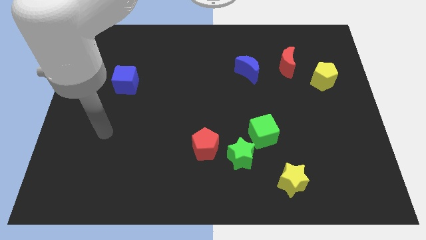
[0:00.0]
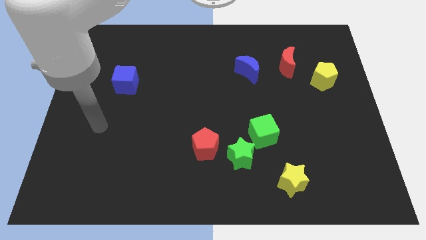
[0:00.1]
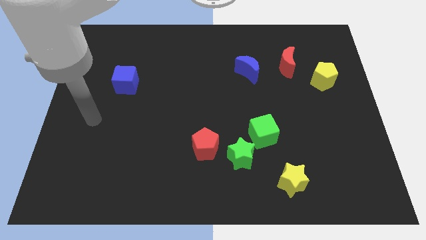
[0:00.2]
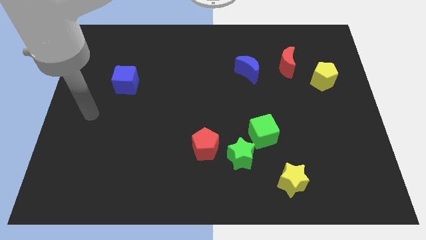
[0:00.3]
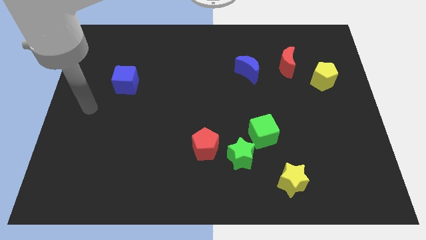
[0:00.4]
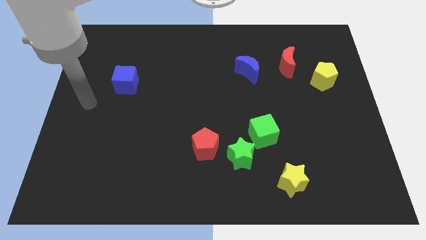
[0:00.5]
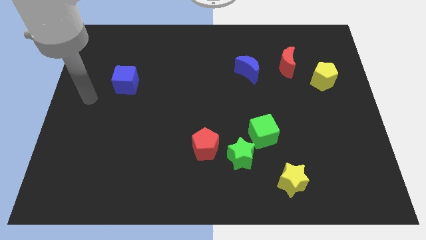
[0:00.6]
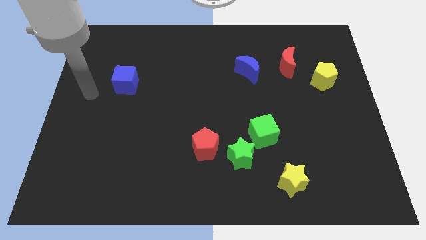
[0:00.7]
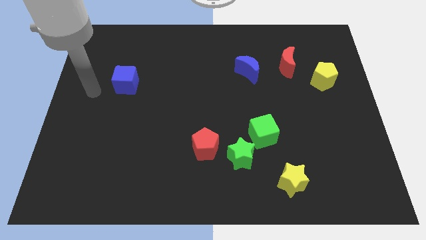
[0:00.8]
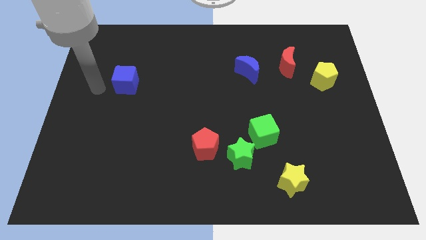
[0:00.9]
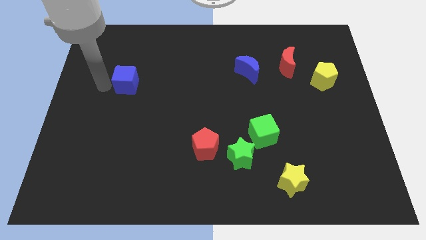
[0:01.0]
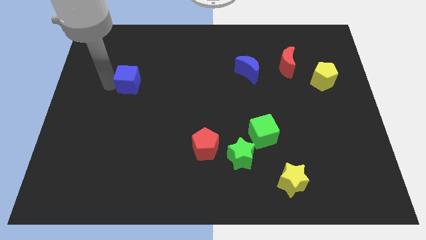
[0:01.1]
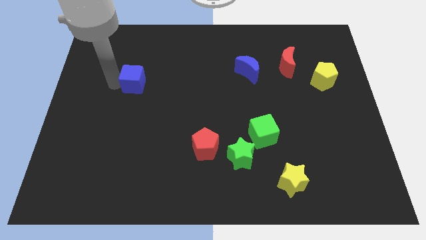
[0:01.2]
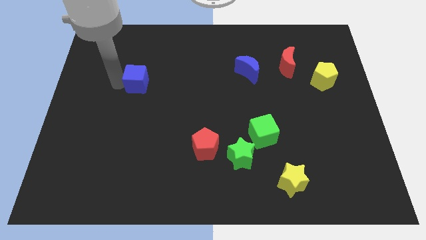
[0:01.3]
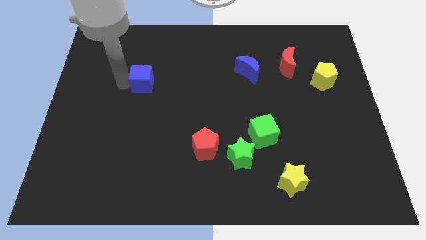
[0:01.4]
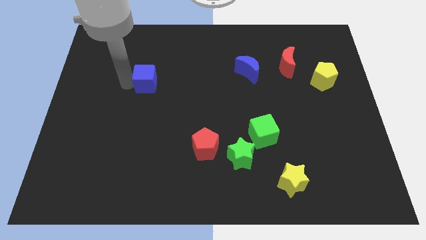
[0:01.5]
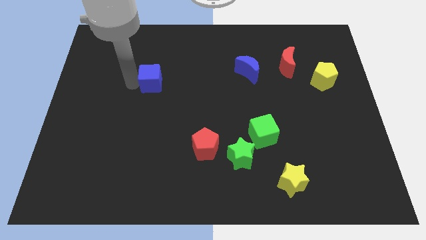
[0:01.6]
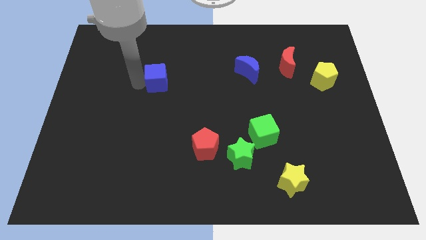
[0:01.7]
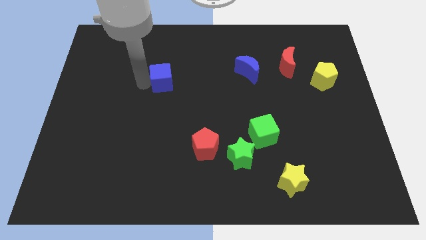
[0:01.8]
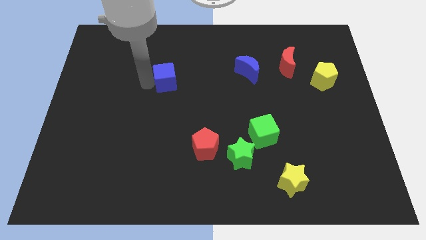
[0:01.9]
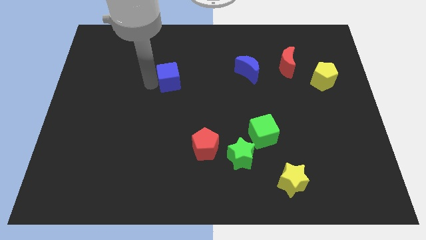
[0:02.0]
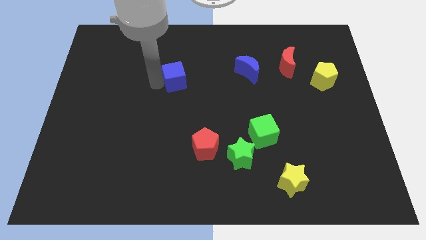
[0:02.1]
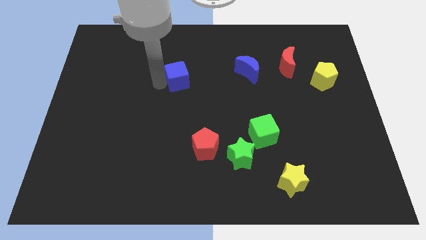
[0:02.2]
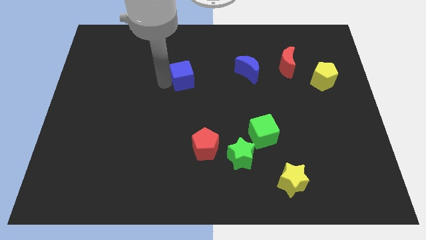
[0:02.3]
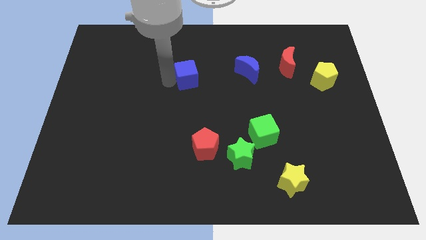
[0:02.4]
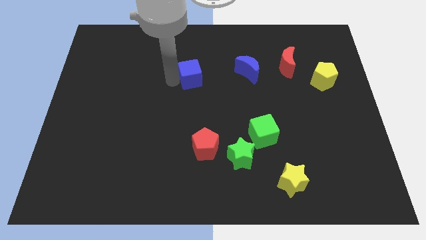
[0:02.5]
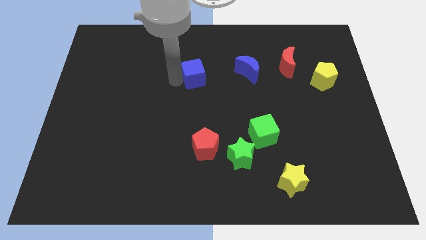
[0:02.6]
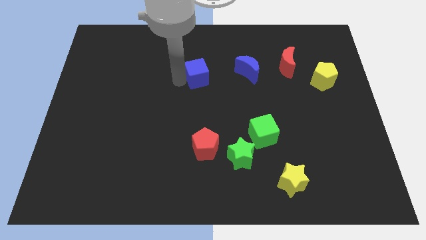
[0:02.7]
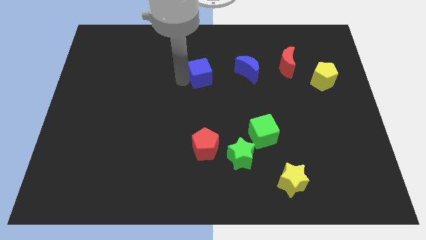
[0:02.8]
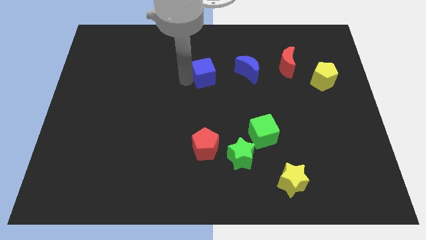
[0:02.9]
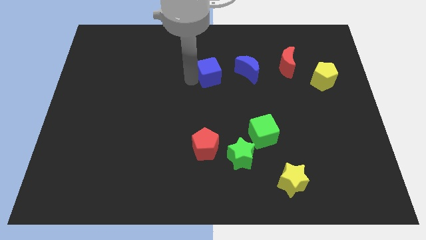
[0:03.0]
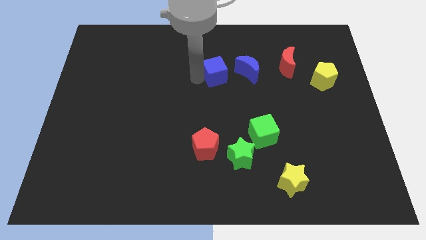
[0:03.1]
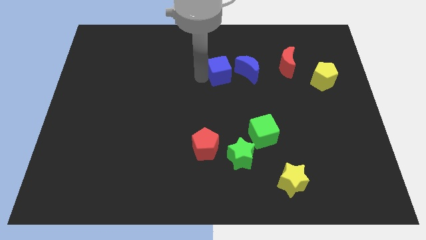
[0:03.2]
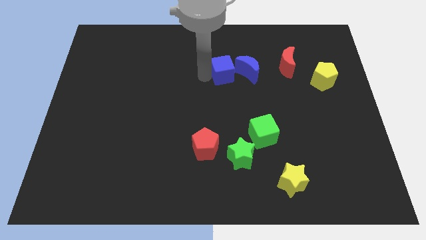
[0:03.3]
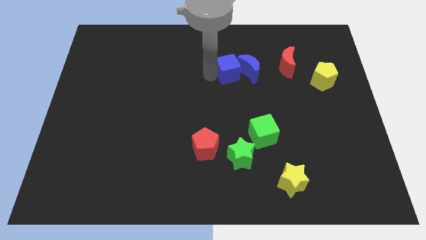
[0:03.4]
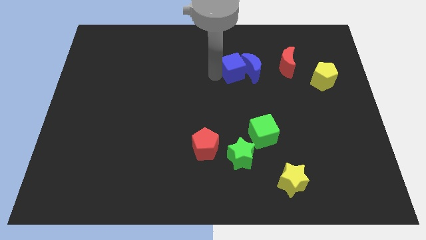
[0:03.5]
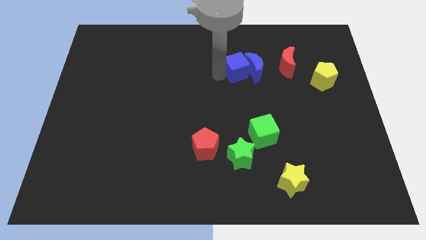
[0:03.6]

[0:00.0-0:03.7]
slide the blue cube close to the blue moon

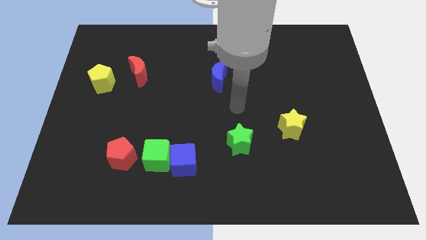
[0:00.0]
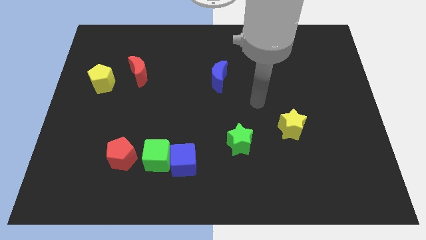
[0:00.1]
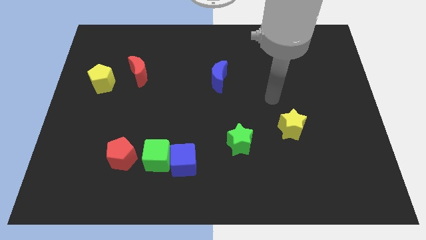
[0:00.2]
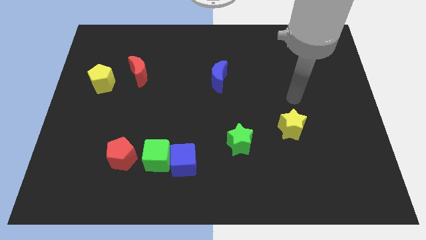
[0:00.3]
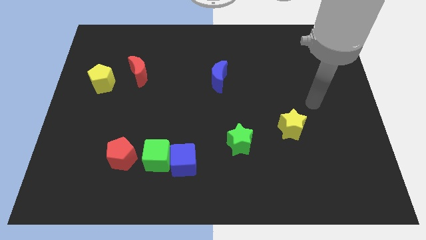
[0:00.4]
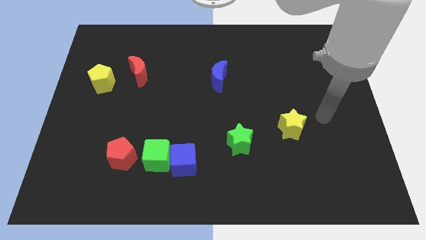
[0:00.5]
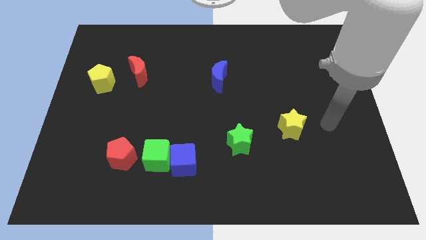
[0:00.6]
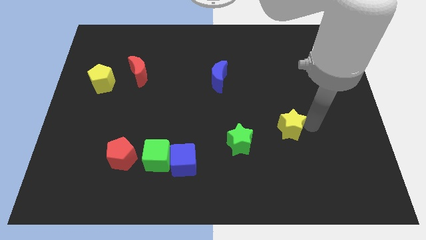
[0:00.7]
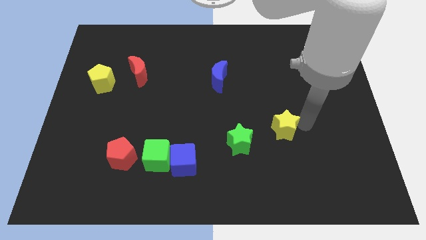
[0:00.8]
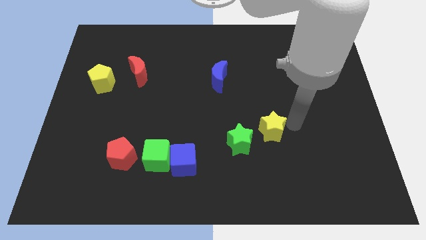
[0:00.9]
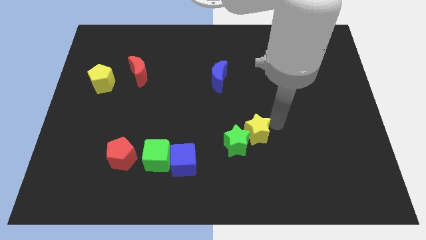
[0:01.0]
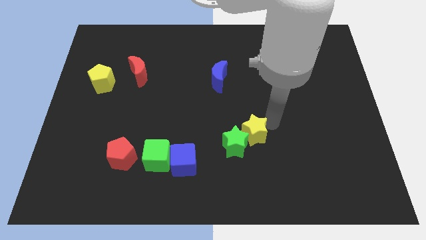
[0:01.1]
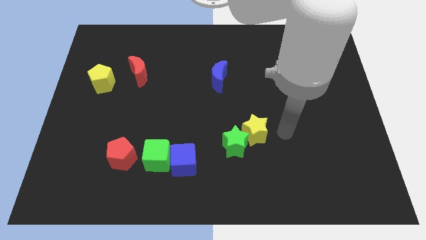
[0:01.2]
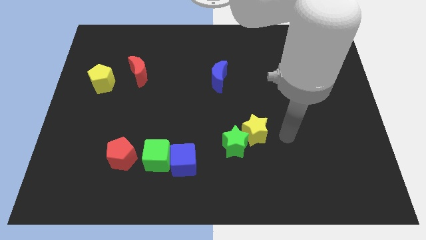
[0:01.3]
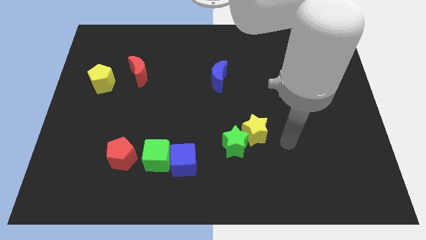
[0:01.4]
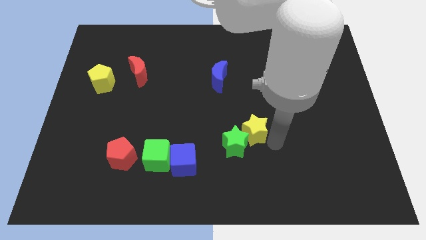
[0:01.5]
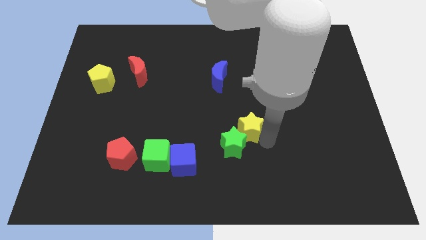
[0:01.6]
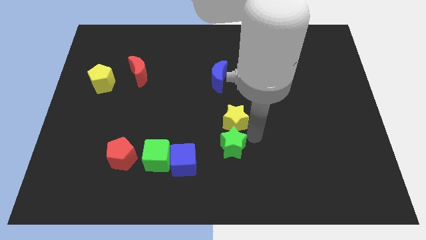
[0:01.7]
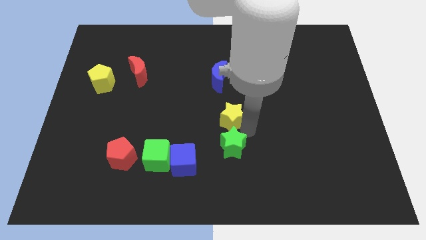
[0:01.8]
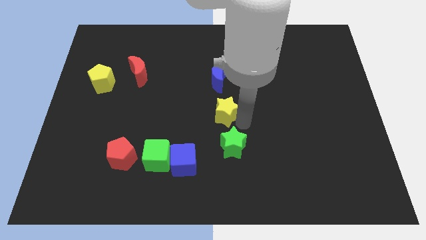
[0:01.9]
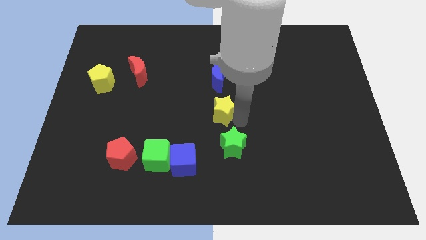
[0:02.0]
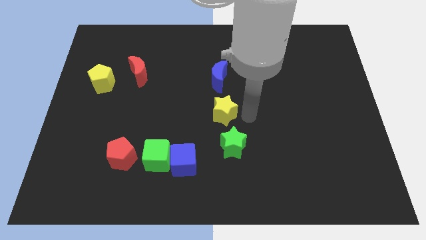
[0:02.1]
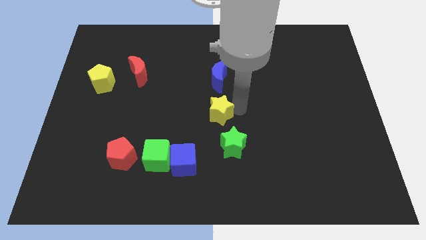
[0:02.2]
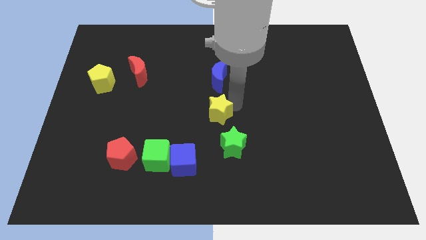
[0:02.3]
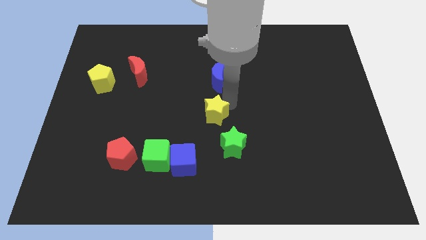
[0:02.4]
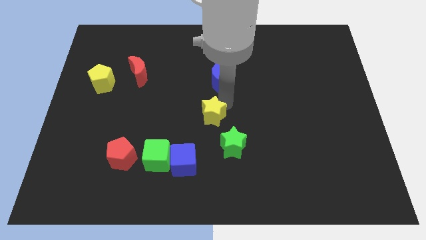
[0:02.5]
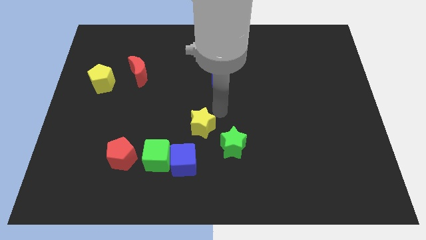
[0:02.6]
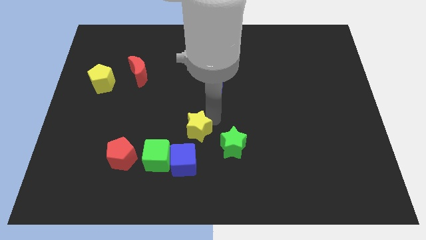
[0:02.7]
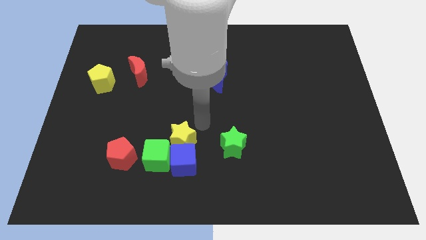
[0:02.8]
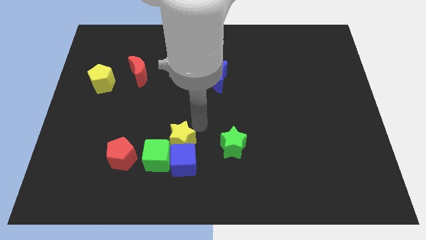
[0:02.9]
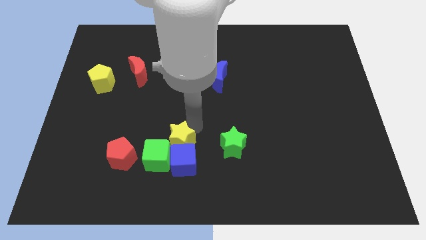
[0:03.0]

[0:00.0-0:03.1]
move the yellow star to the blue cube

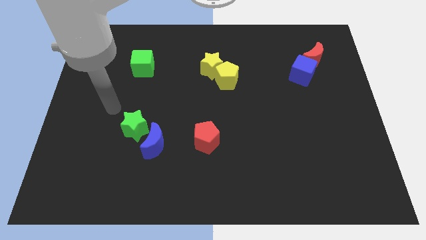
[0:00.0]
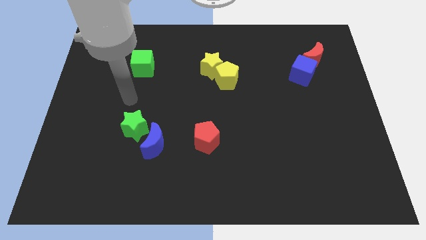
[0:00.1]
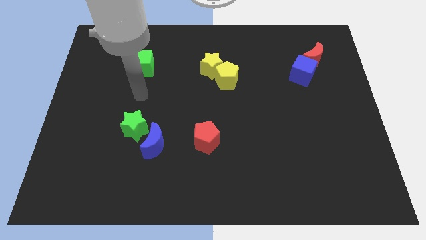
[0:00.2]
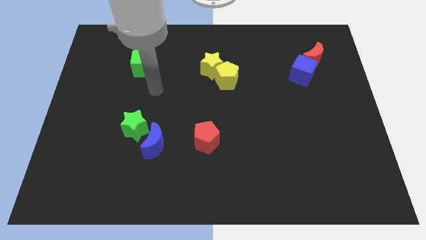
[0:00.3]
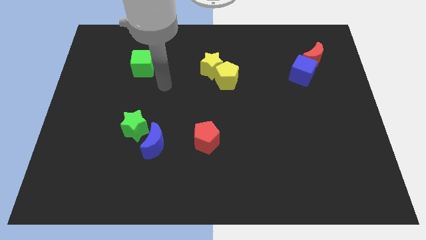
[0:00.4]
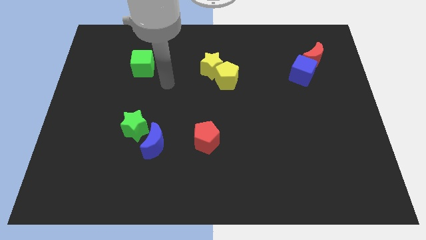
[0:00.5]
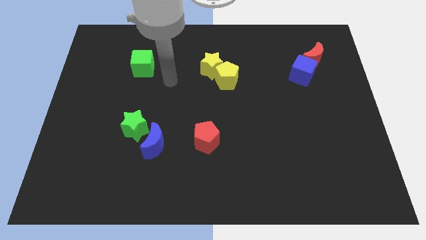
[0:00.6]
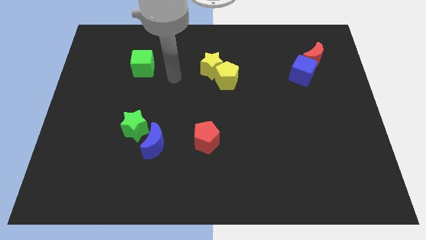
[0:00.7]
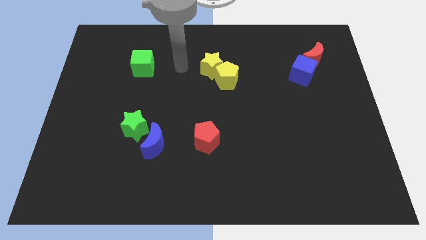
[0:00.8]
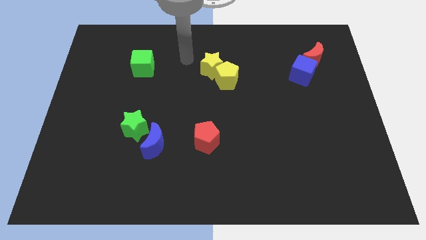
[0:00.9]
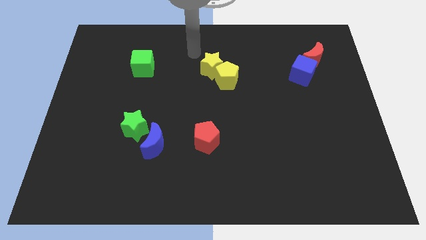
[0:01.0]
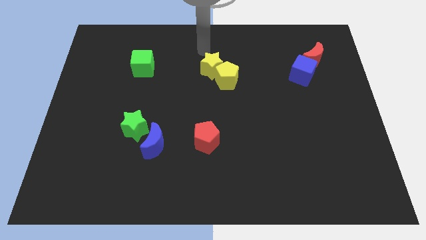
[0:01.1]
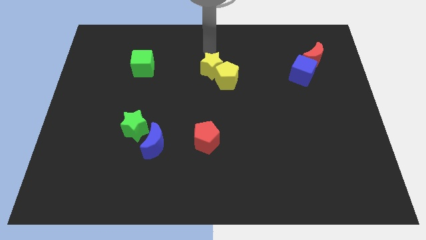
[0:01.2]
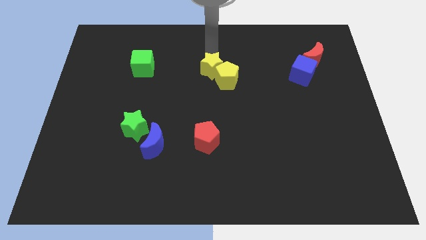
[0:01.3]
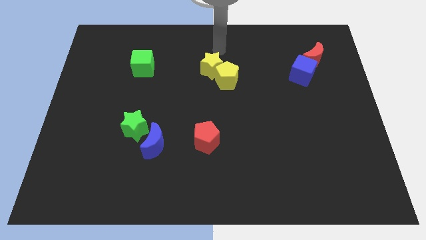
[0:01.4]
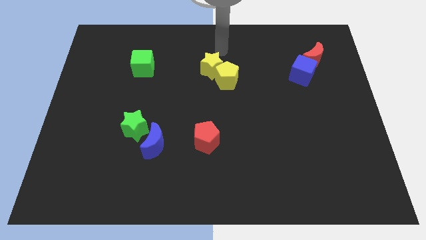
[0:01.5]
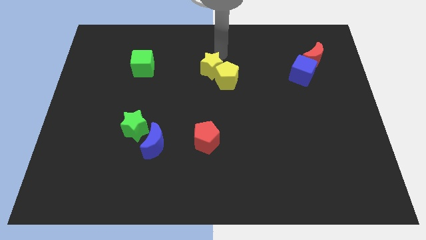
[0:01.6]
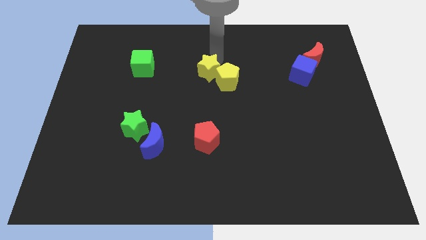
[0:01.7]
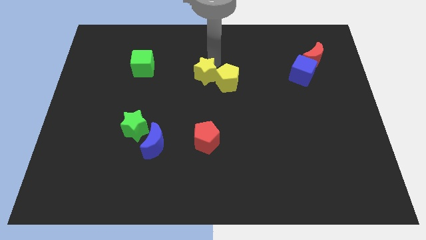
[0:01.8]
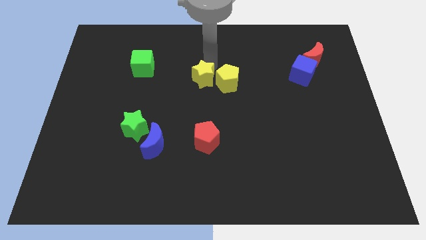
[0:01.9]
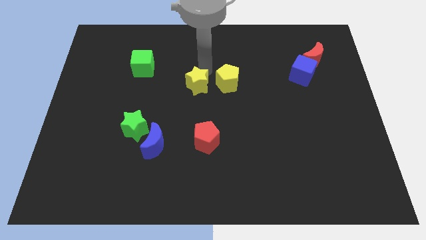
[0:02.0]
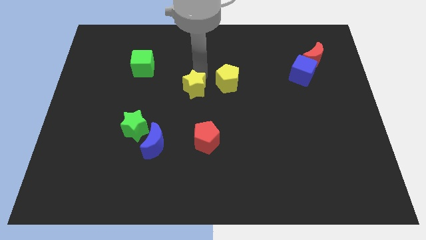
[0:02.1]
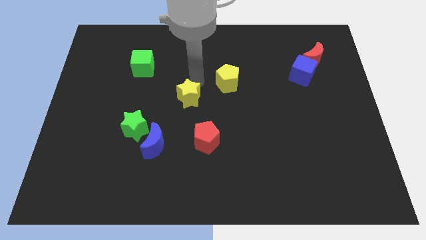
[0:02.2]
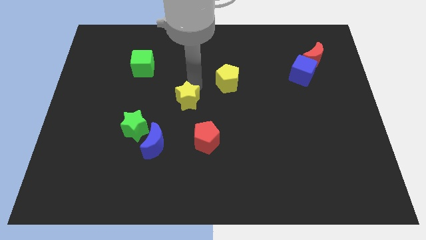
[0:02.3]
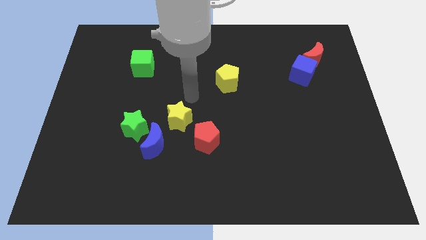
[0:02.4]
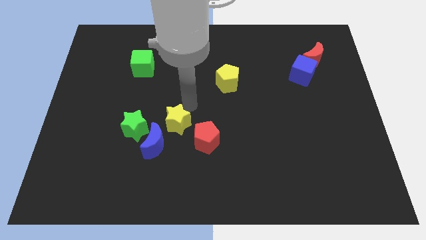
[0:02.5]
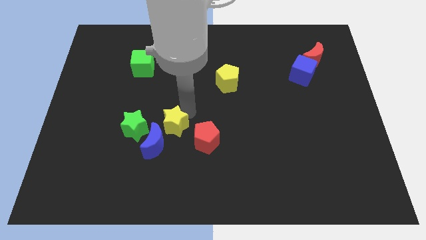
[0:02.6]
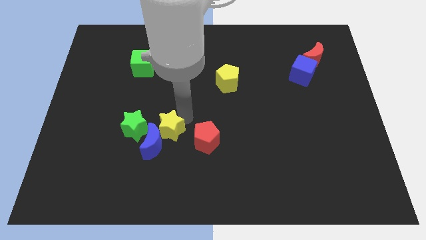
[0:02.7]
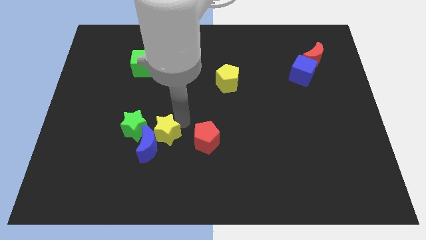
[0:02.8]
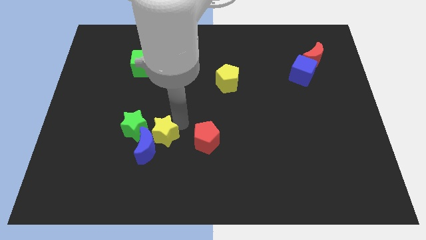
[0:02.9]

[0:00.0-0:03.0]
push the yellow star next to the blue moon
